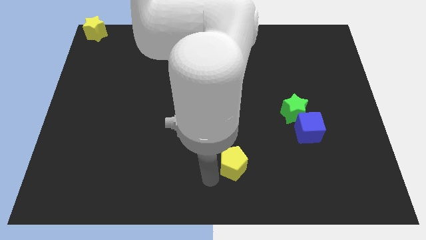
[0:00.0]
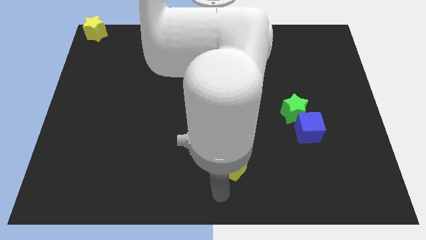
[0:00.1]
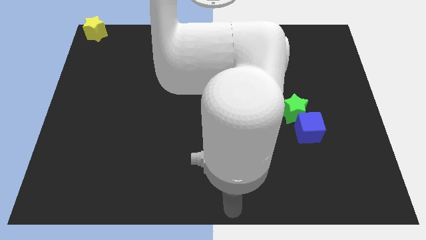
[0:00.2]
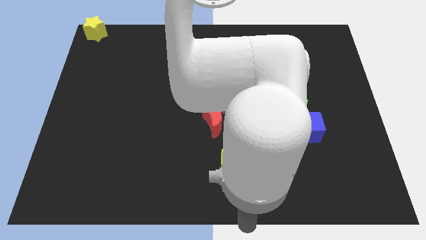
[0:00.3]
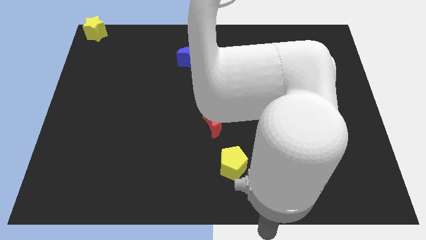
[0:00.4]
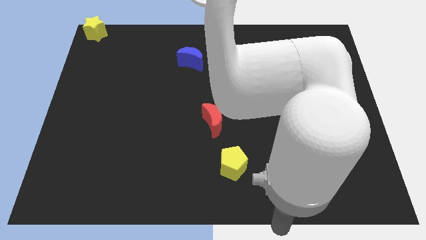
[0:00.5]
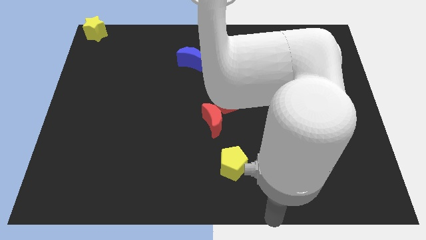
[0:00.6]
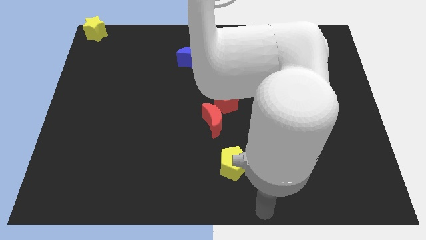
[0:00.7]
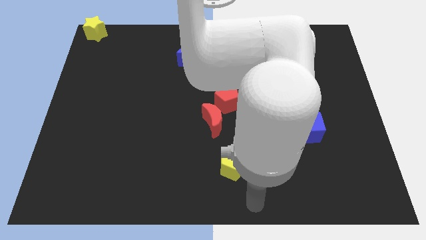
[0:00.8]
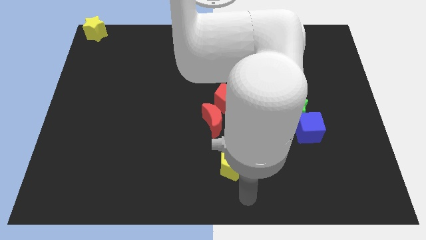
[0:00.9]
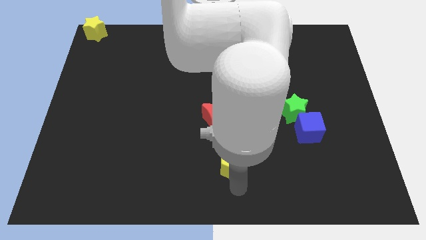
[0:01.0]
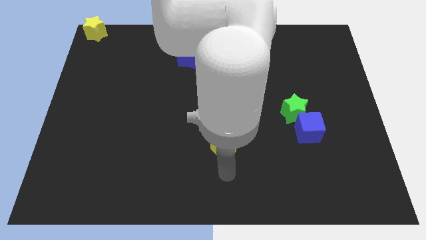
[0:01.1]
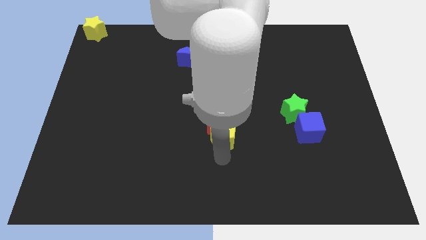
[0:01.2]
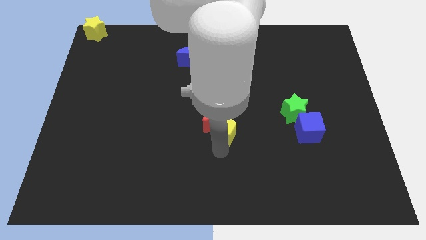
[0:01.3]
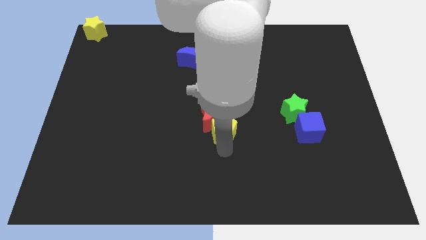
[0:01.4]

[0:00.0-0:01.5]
push the yellow pentagon into the red moon

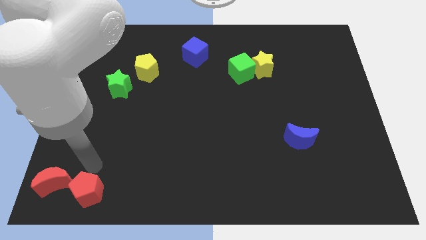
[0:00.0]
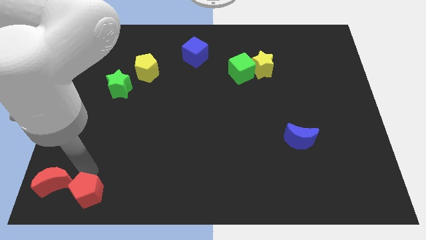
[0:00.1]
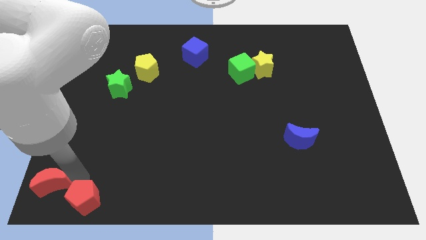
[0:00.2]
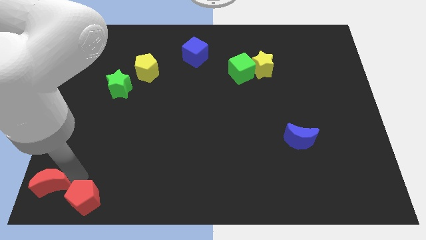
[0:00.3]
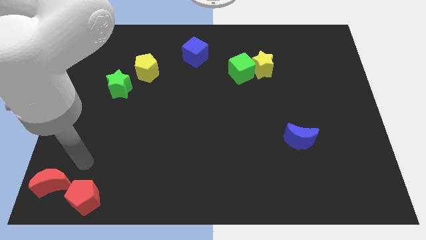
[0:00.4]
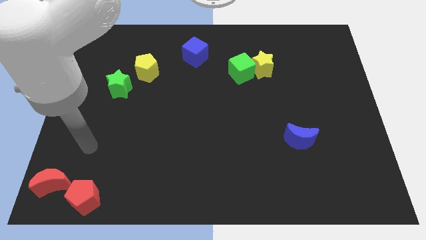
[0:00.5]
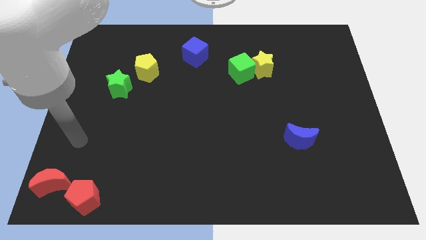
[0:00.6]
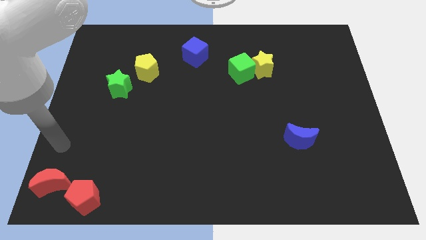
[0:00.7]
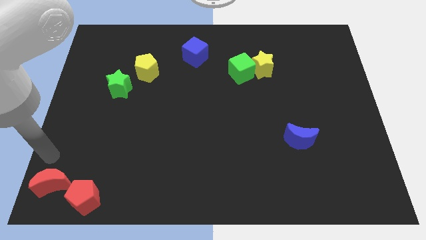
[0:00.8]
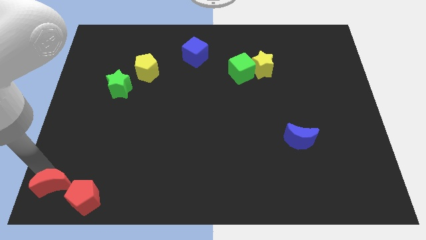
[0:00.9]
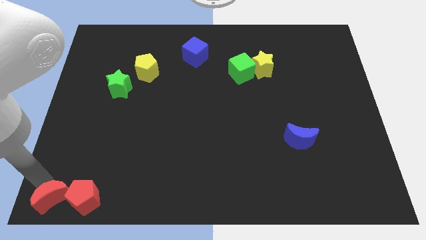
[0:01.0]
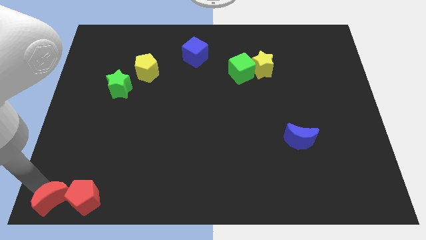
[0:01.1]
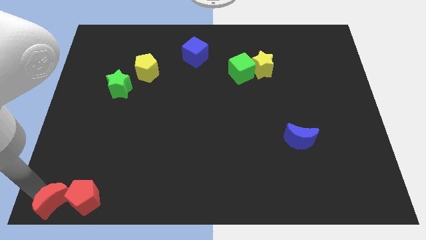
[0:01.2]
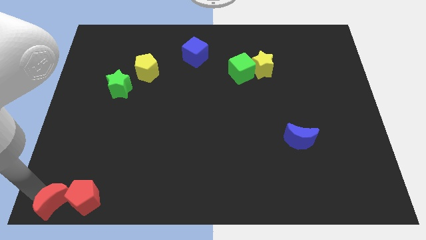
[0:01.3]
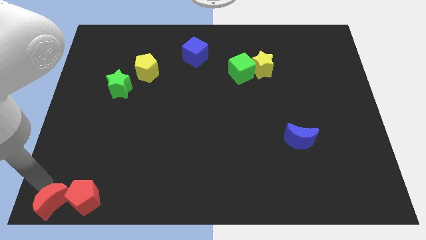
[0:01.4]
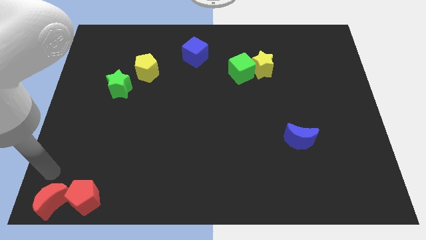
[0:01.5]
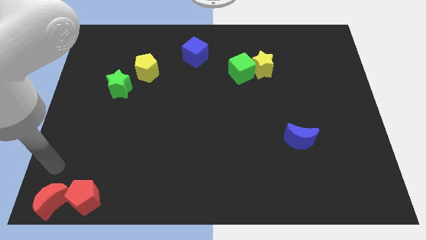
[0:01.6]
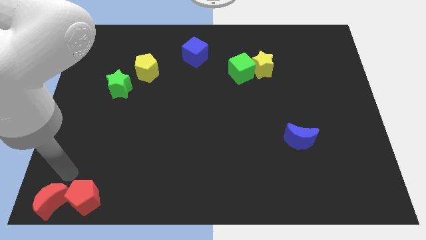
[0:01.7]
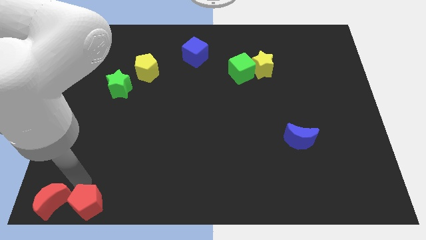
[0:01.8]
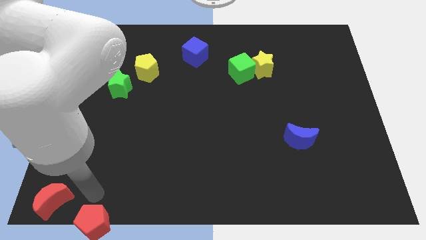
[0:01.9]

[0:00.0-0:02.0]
move red moon along with red pentagon downwards

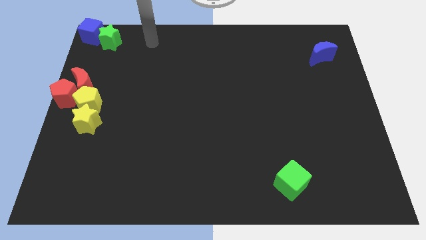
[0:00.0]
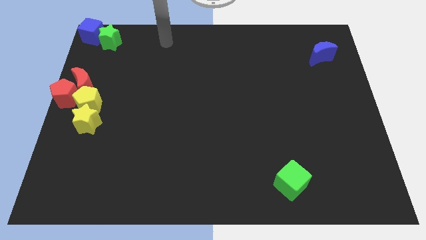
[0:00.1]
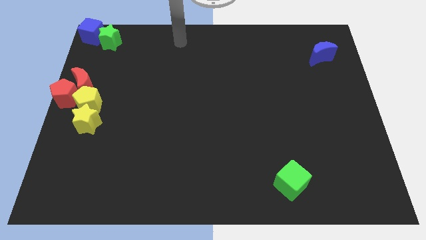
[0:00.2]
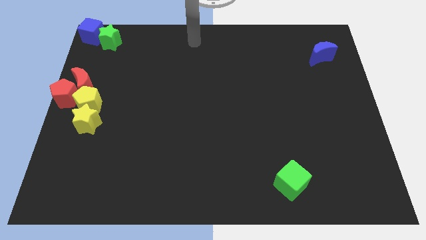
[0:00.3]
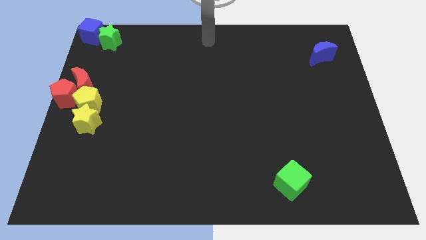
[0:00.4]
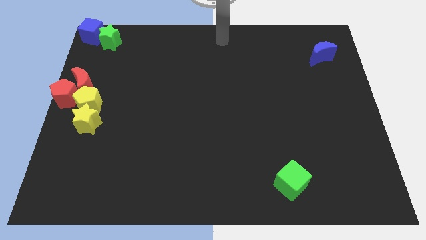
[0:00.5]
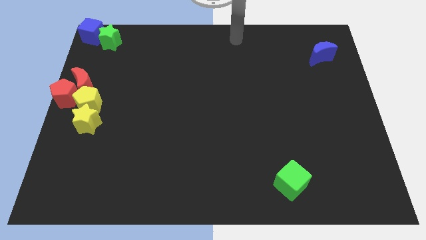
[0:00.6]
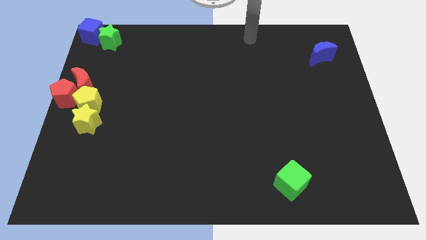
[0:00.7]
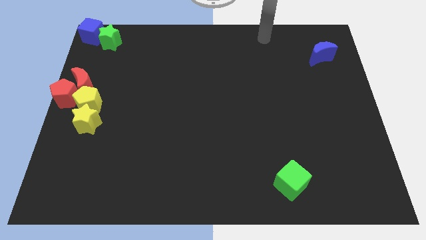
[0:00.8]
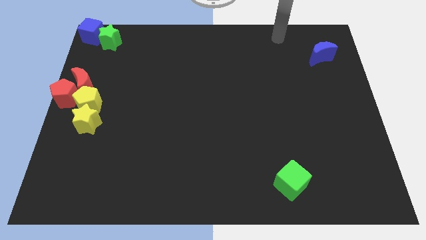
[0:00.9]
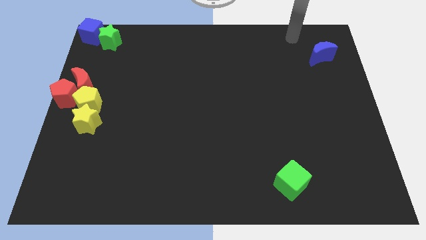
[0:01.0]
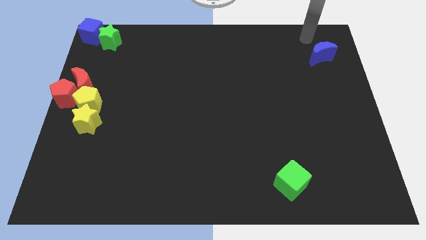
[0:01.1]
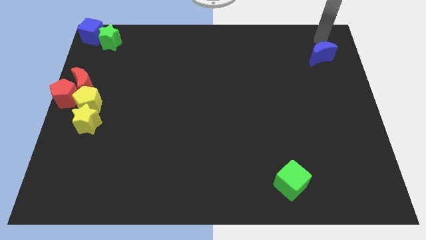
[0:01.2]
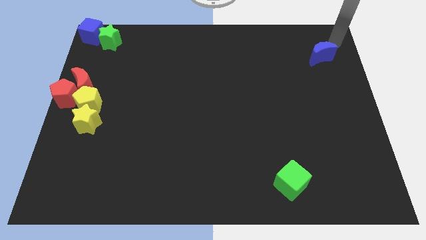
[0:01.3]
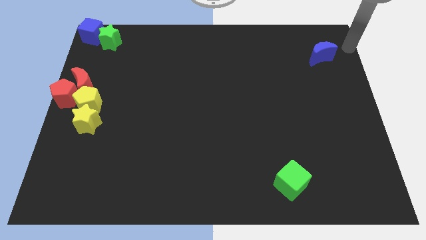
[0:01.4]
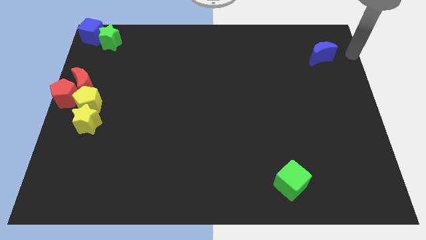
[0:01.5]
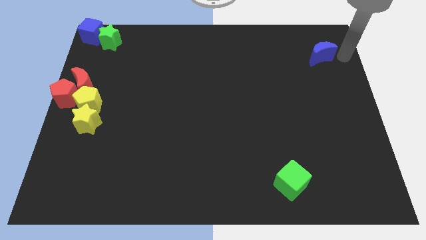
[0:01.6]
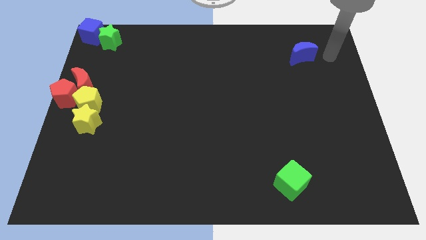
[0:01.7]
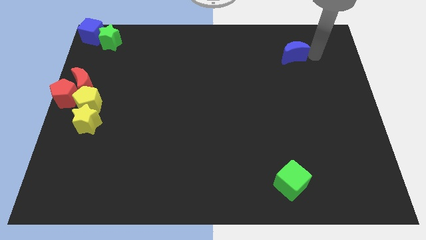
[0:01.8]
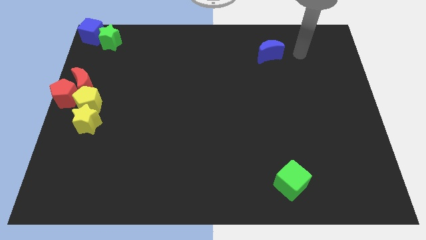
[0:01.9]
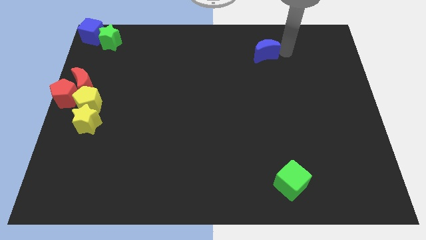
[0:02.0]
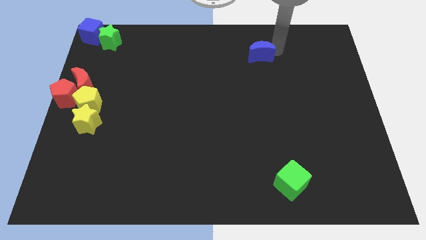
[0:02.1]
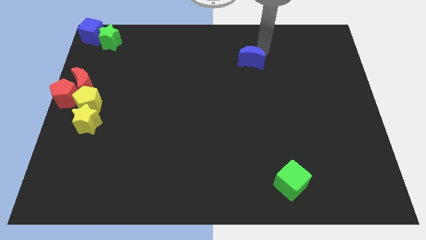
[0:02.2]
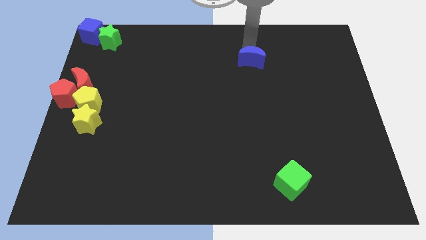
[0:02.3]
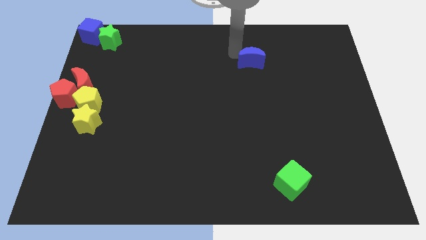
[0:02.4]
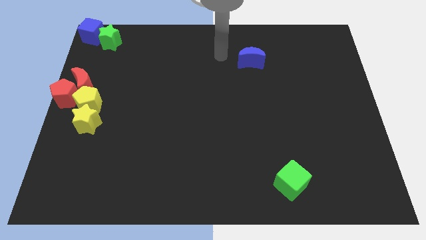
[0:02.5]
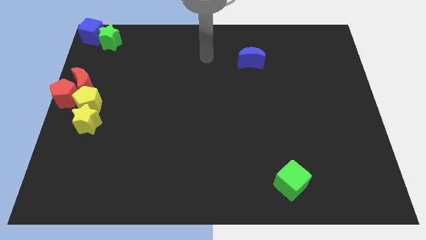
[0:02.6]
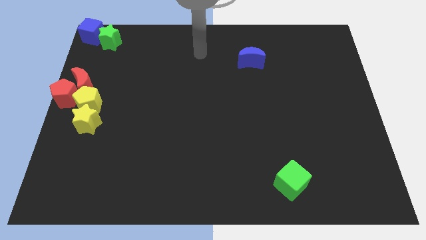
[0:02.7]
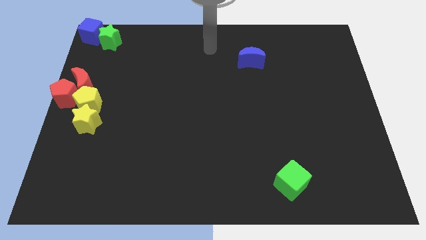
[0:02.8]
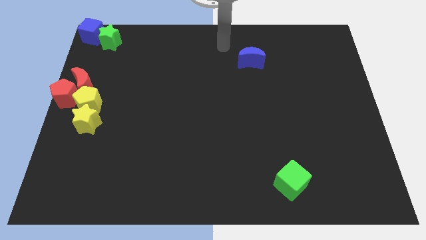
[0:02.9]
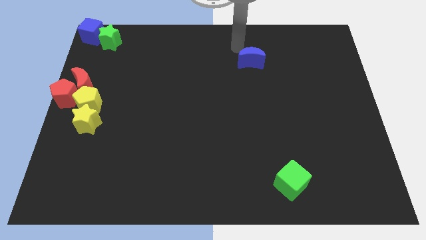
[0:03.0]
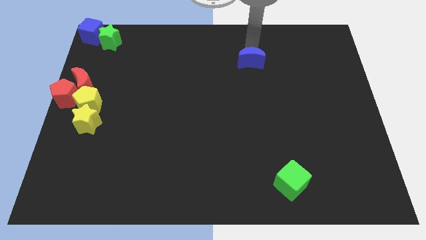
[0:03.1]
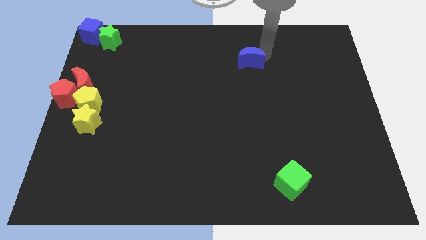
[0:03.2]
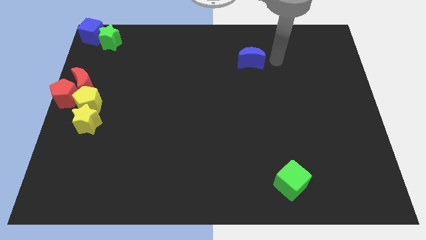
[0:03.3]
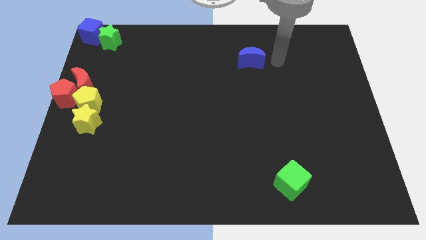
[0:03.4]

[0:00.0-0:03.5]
slide the blue moon towards the left side

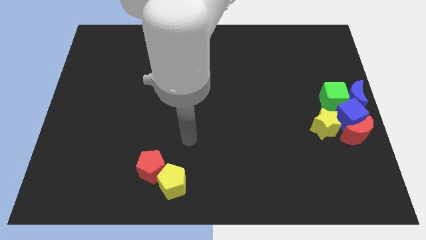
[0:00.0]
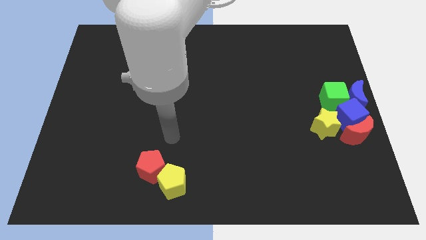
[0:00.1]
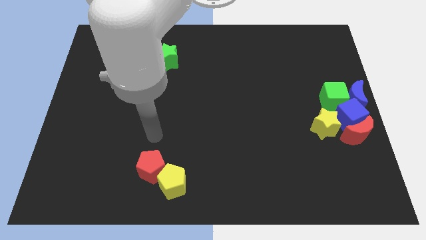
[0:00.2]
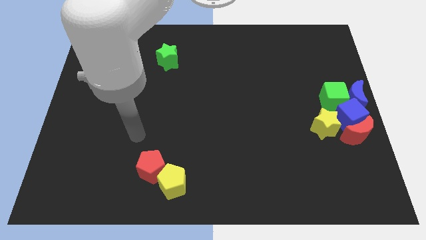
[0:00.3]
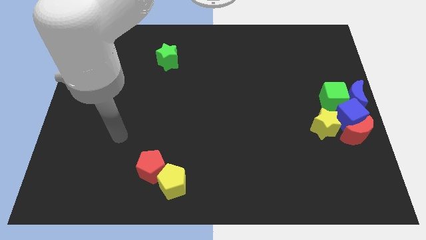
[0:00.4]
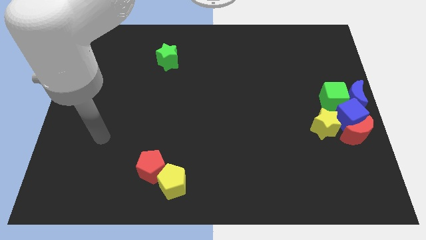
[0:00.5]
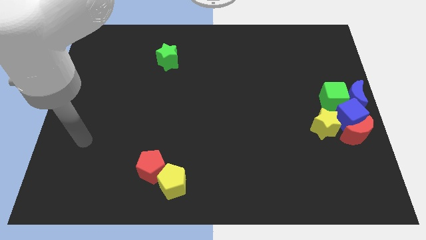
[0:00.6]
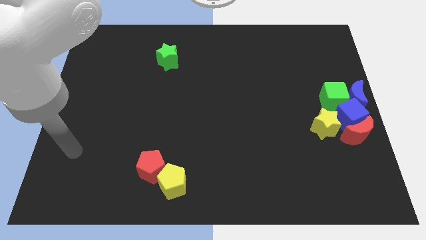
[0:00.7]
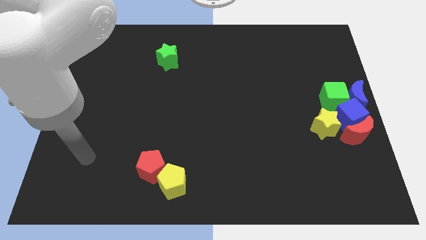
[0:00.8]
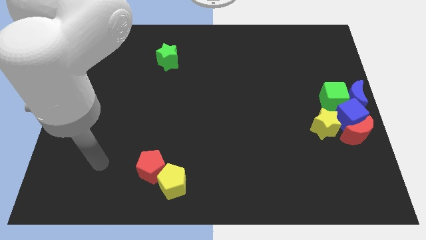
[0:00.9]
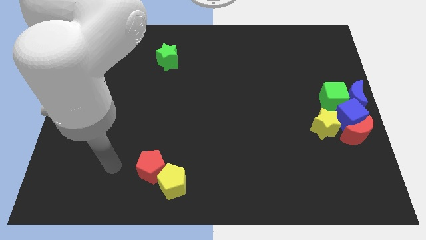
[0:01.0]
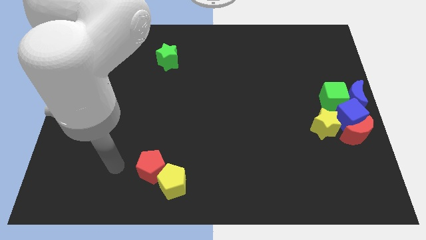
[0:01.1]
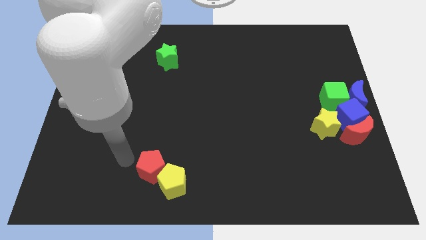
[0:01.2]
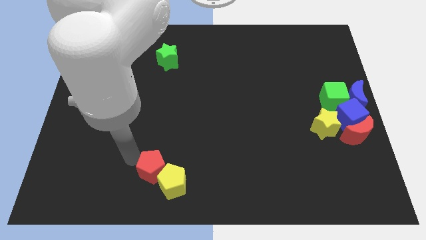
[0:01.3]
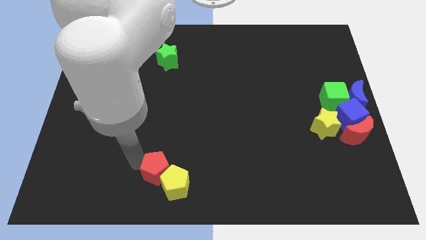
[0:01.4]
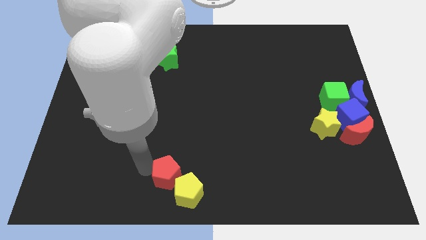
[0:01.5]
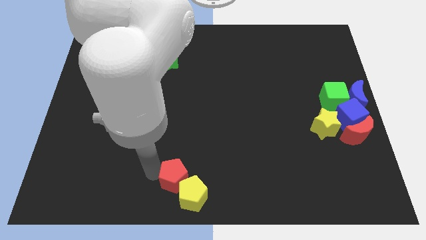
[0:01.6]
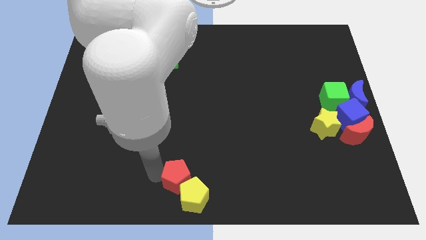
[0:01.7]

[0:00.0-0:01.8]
push the red and yellow pentagons towards the bottom center of the board
